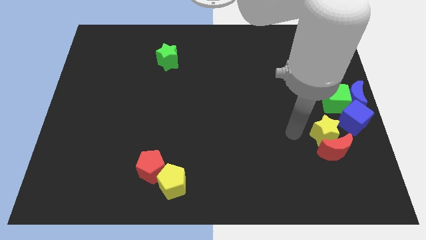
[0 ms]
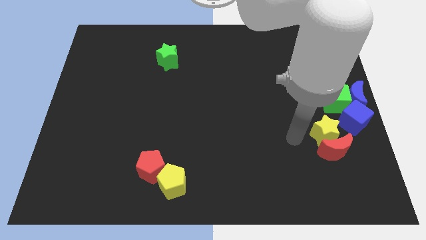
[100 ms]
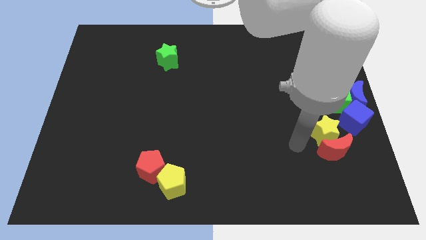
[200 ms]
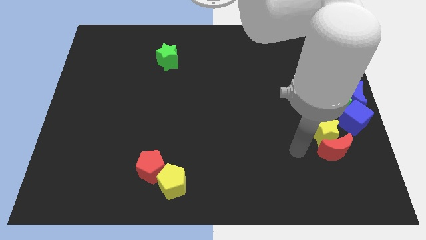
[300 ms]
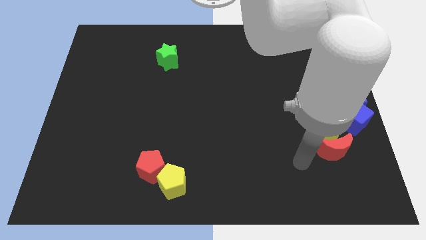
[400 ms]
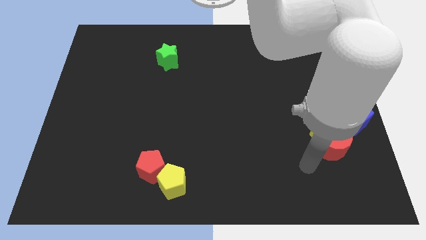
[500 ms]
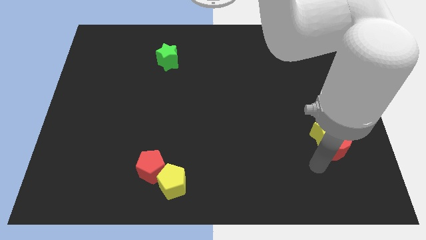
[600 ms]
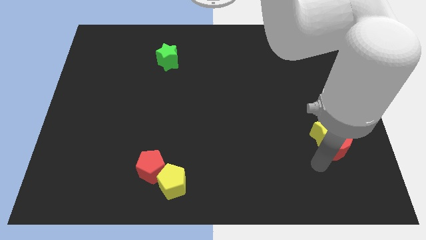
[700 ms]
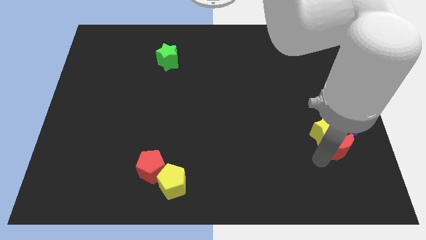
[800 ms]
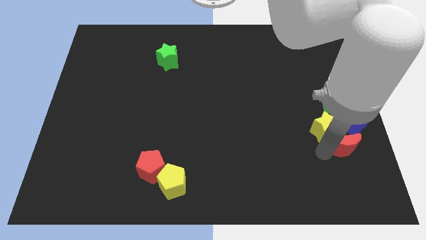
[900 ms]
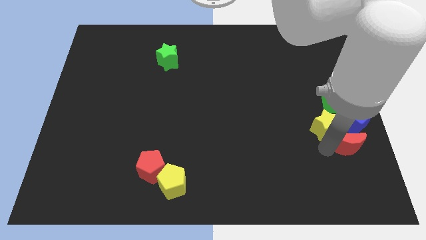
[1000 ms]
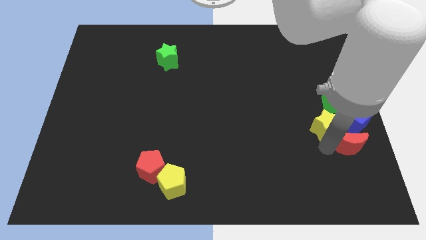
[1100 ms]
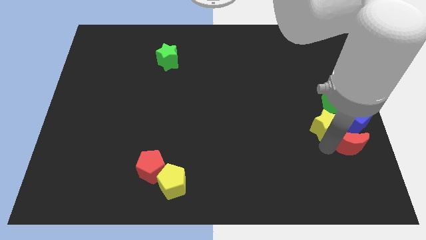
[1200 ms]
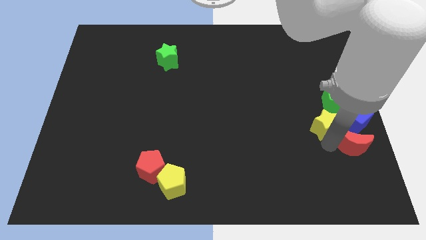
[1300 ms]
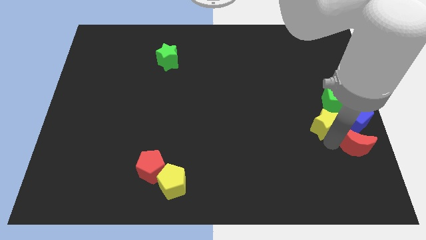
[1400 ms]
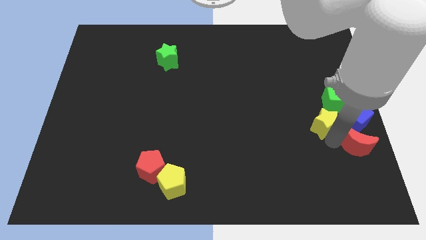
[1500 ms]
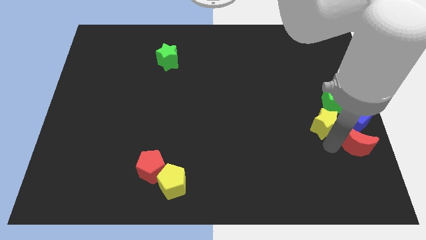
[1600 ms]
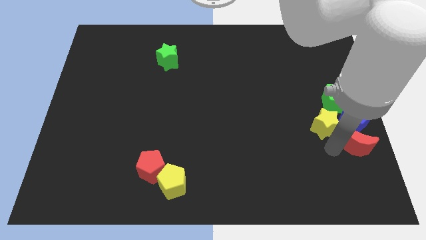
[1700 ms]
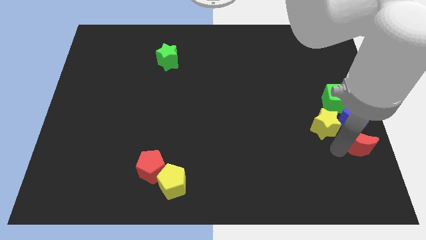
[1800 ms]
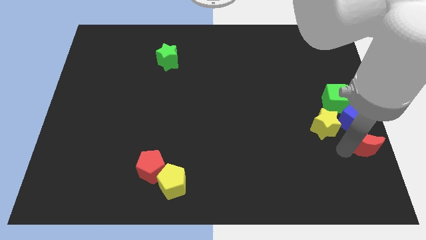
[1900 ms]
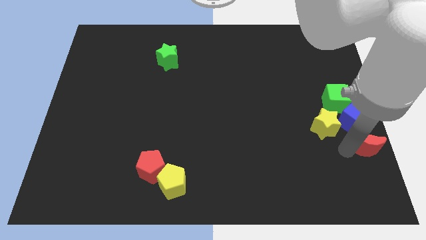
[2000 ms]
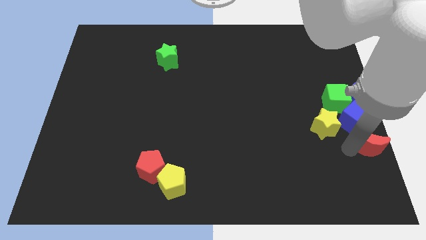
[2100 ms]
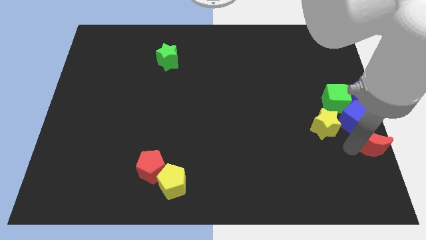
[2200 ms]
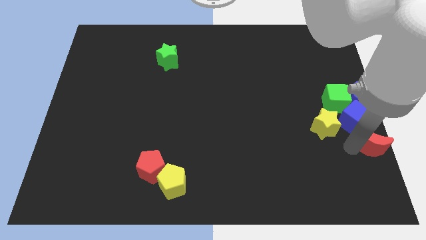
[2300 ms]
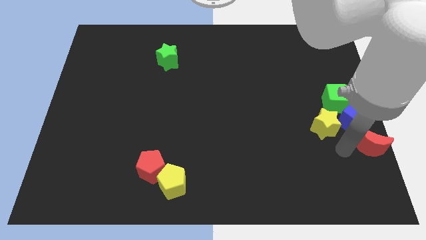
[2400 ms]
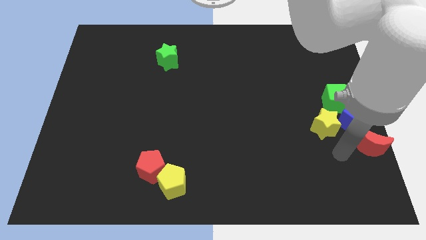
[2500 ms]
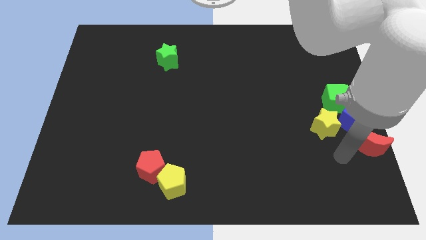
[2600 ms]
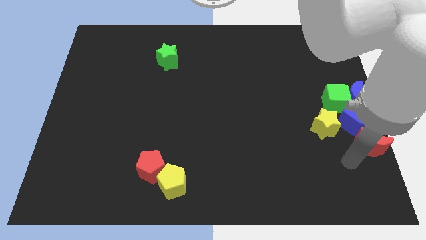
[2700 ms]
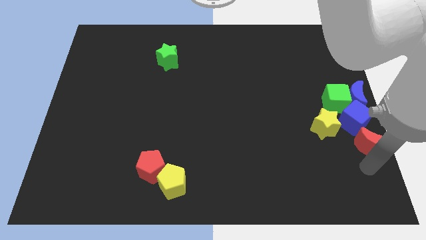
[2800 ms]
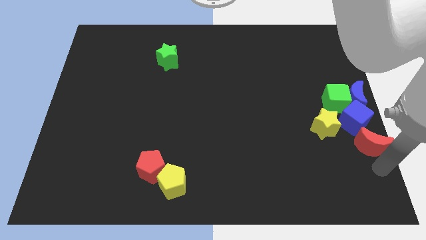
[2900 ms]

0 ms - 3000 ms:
place red moon below blue cube

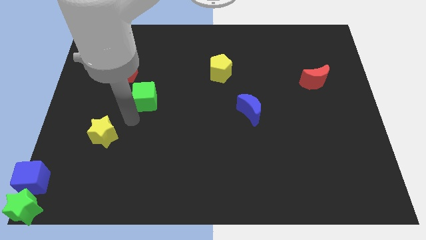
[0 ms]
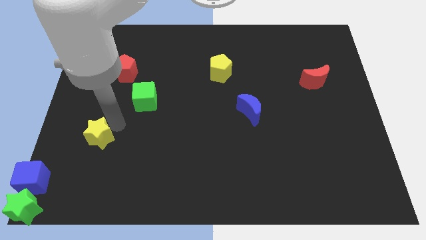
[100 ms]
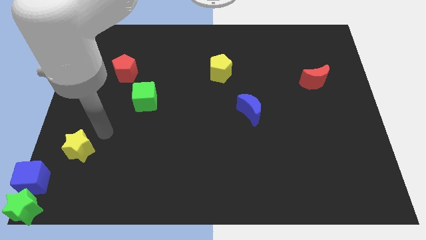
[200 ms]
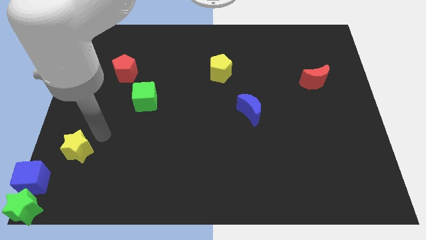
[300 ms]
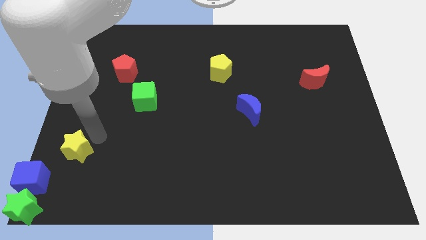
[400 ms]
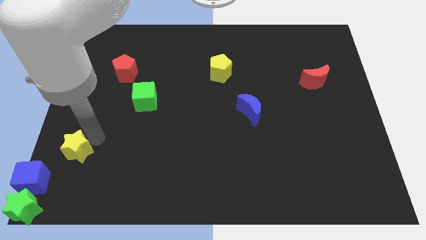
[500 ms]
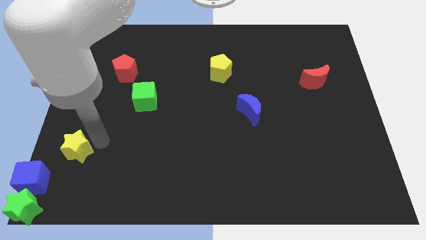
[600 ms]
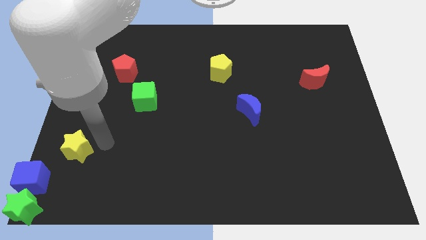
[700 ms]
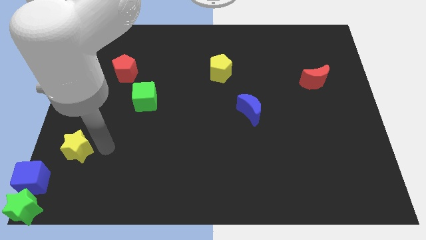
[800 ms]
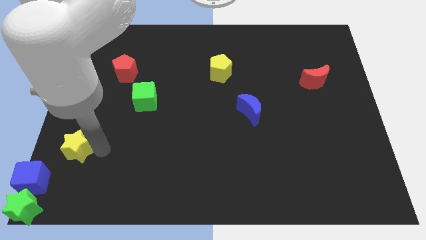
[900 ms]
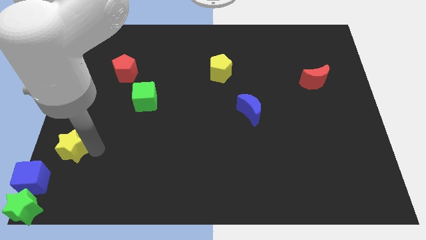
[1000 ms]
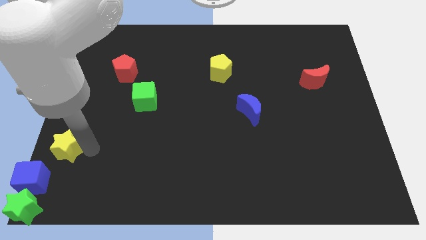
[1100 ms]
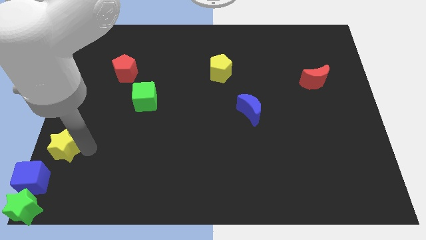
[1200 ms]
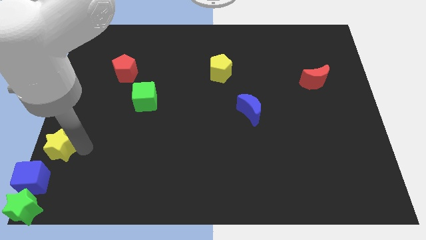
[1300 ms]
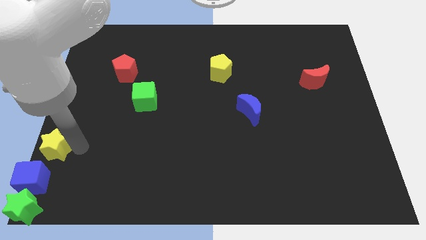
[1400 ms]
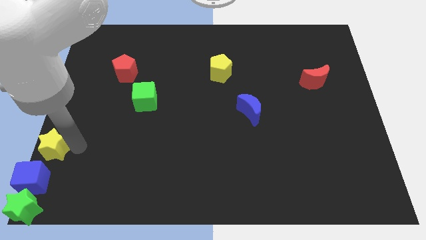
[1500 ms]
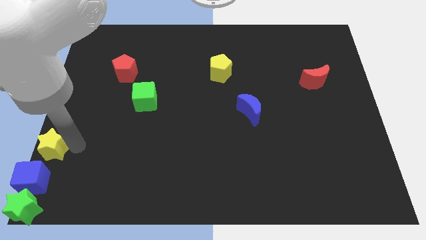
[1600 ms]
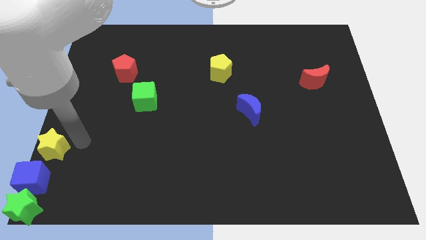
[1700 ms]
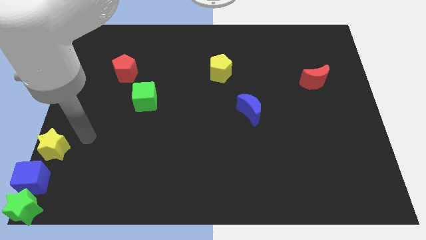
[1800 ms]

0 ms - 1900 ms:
place yellow star to the top of blue cube

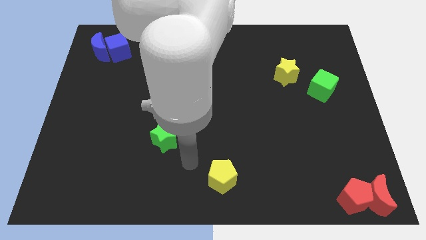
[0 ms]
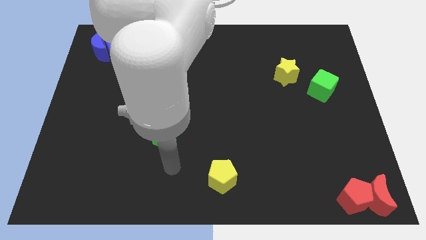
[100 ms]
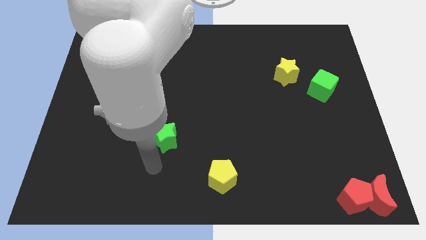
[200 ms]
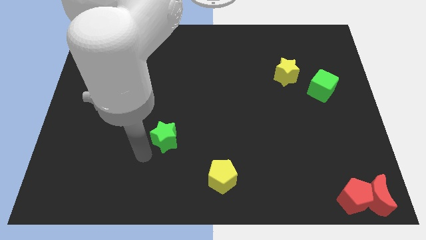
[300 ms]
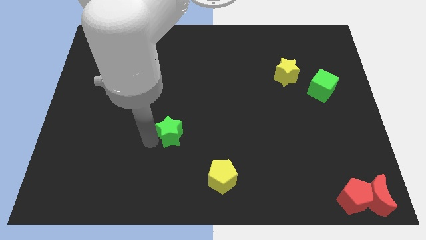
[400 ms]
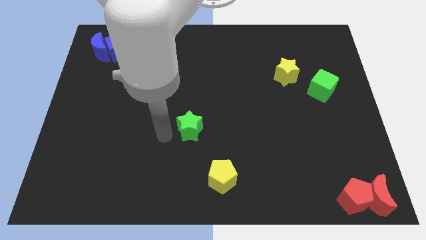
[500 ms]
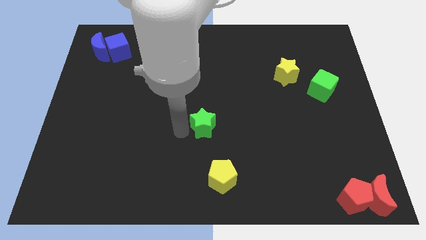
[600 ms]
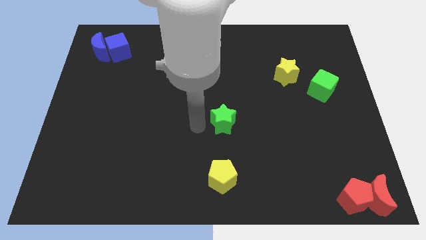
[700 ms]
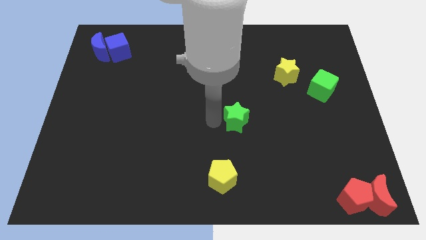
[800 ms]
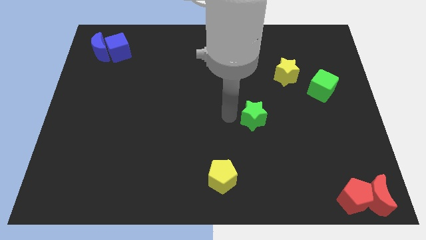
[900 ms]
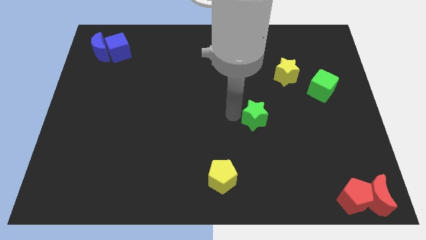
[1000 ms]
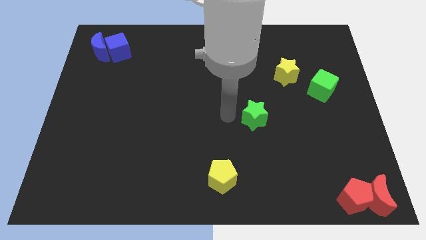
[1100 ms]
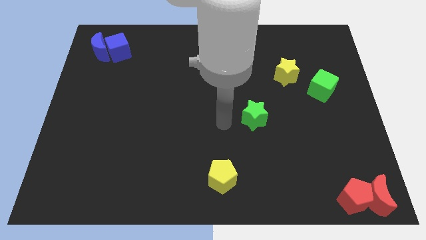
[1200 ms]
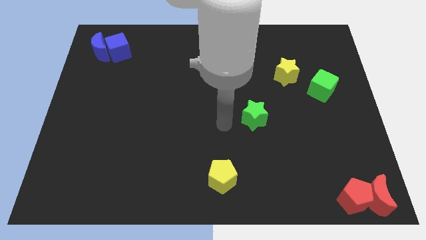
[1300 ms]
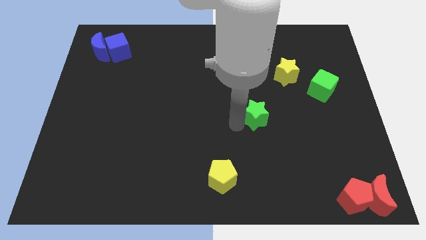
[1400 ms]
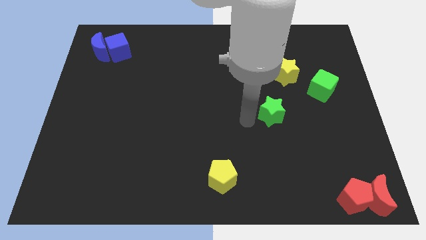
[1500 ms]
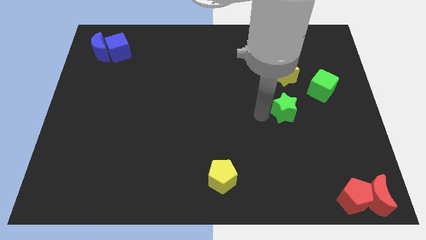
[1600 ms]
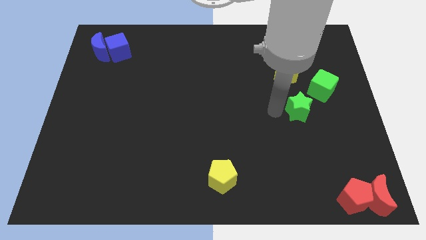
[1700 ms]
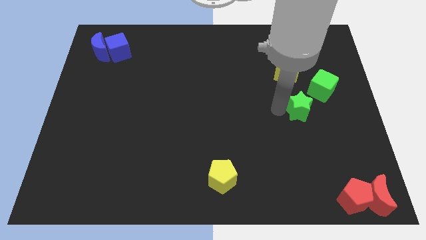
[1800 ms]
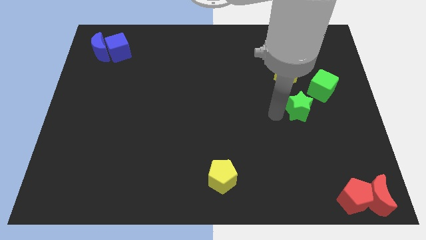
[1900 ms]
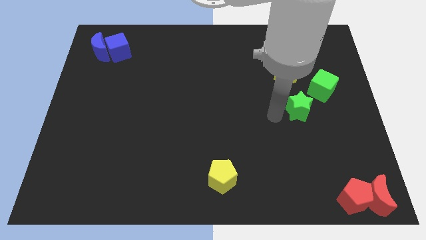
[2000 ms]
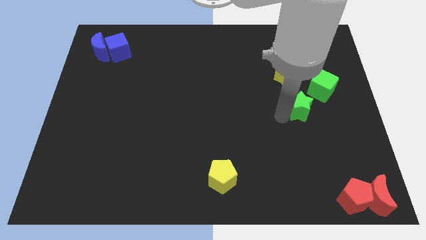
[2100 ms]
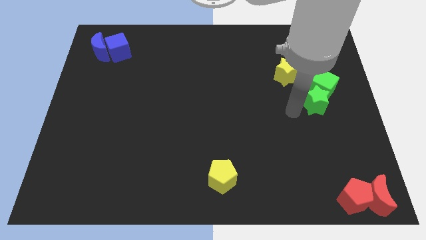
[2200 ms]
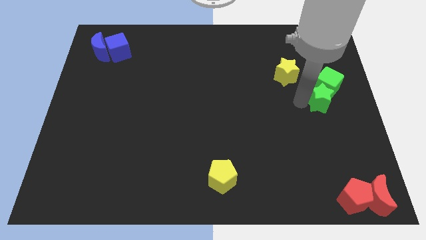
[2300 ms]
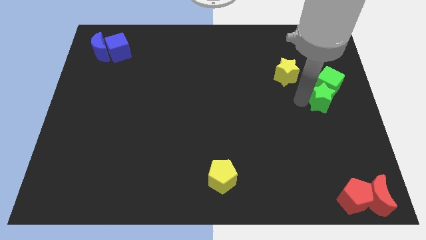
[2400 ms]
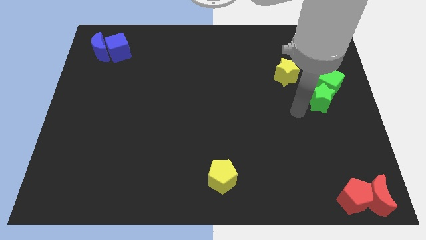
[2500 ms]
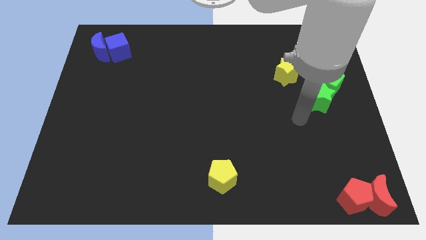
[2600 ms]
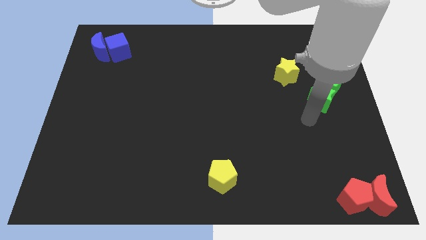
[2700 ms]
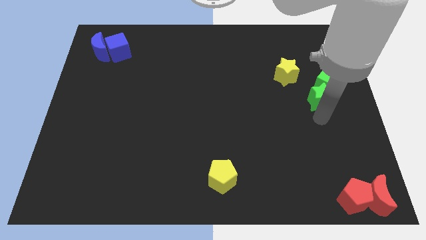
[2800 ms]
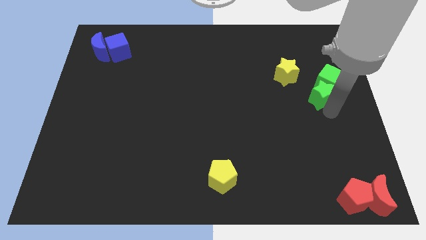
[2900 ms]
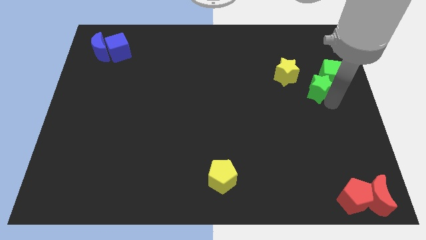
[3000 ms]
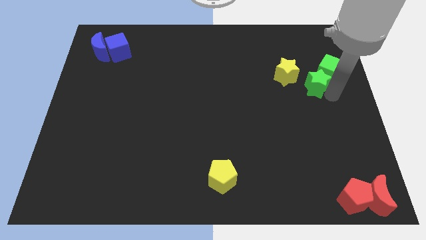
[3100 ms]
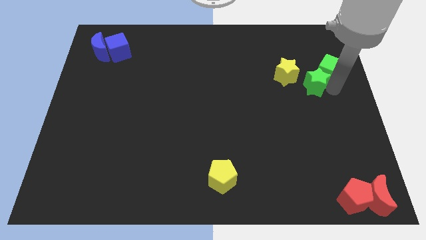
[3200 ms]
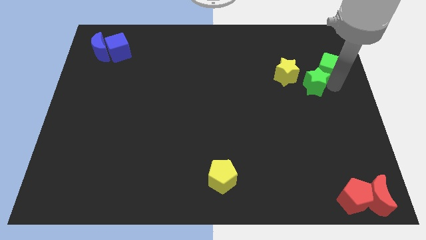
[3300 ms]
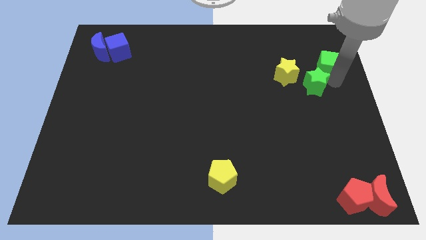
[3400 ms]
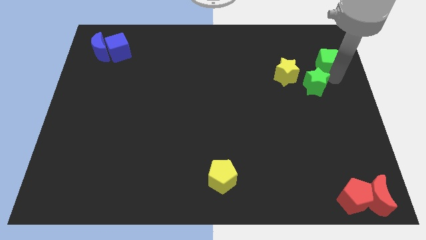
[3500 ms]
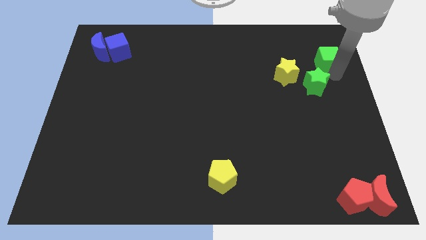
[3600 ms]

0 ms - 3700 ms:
move the green star into the green cube

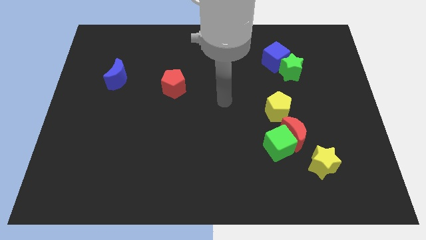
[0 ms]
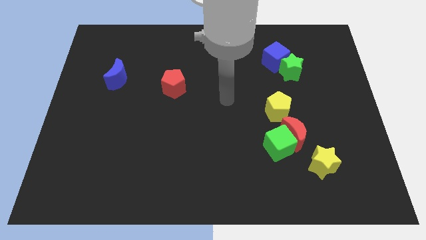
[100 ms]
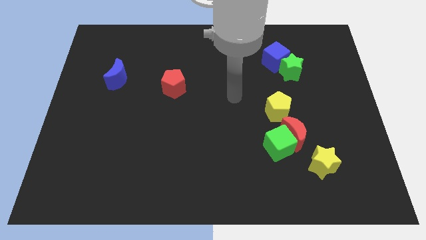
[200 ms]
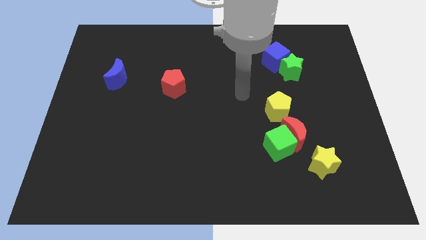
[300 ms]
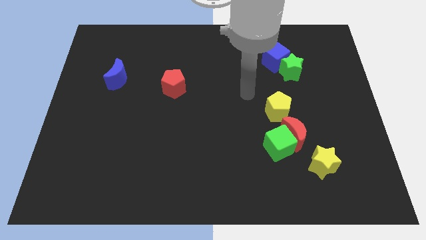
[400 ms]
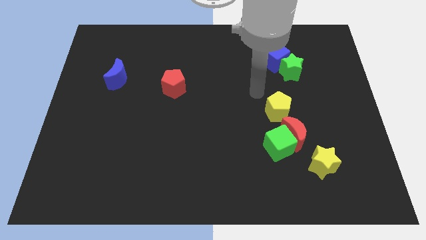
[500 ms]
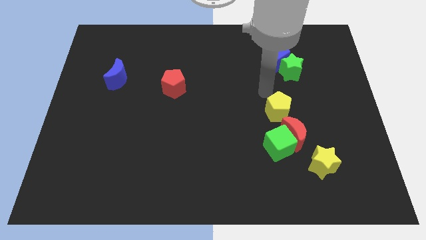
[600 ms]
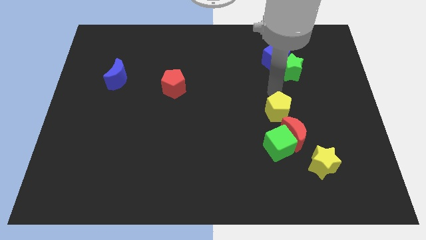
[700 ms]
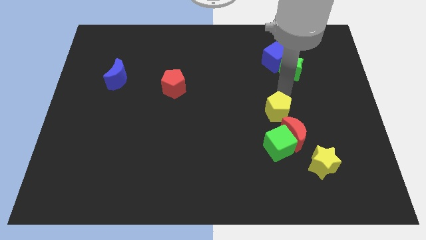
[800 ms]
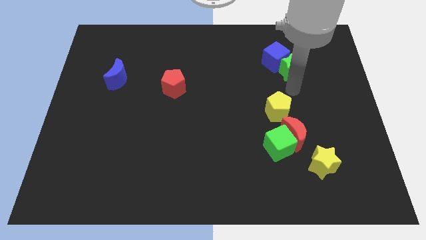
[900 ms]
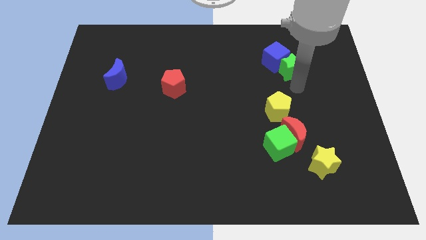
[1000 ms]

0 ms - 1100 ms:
slide your arm below green star
